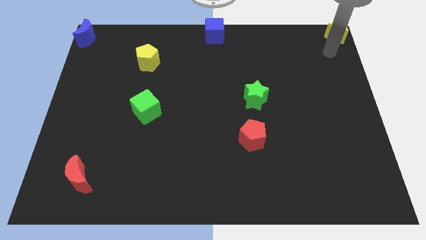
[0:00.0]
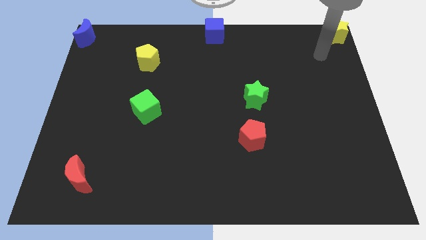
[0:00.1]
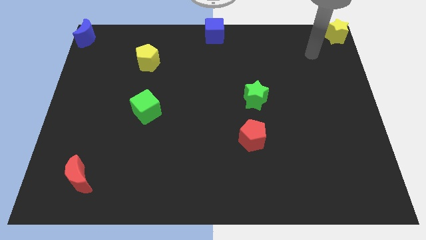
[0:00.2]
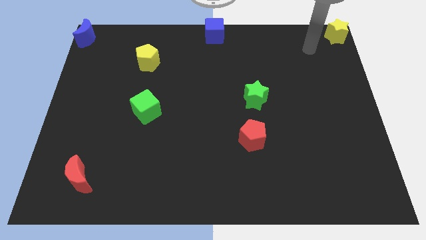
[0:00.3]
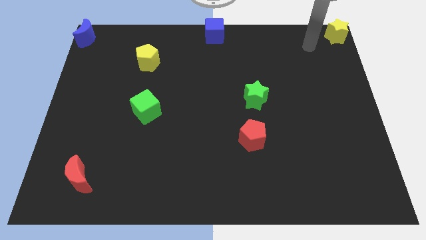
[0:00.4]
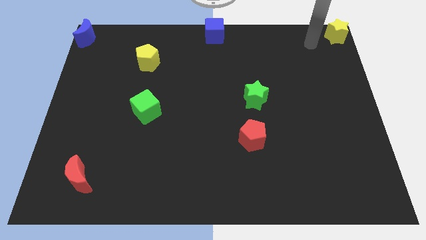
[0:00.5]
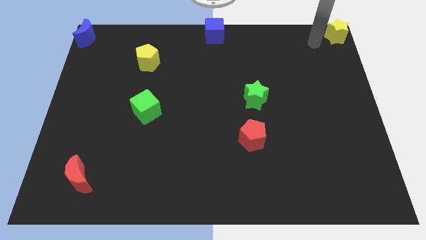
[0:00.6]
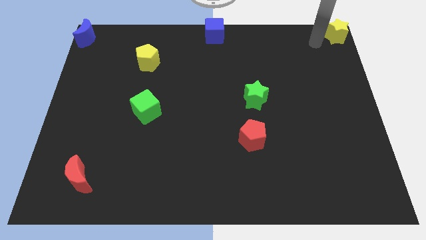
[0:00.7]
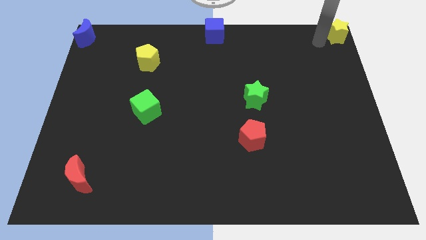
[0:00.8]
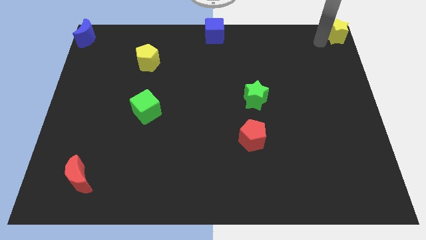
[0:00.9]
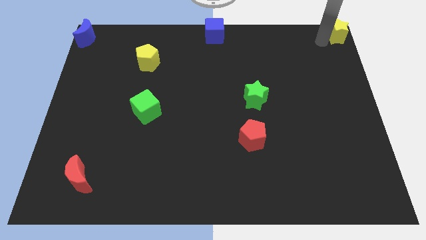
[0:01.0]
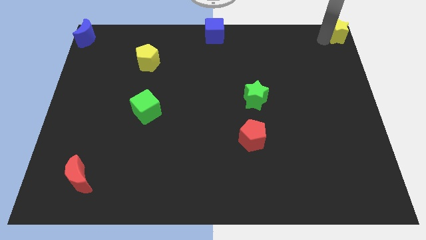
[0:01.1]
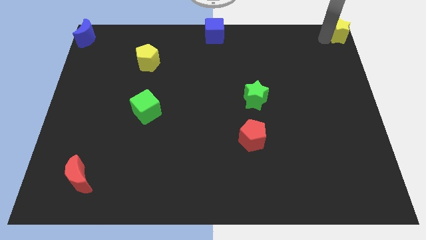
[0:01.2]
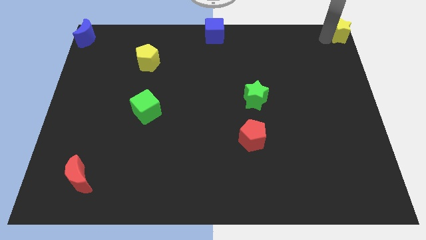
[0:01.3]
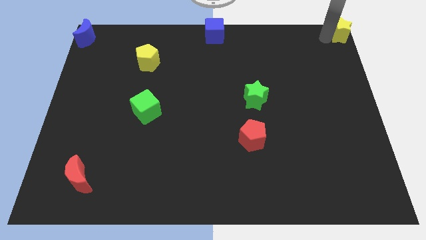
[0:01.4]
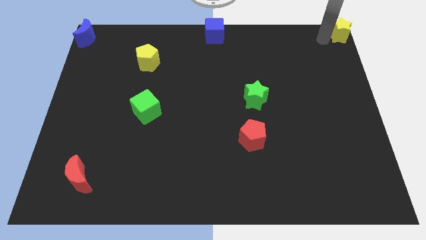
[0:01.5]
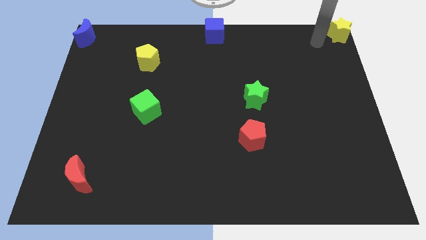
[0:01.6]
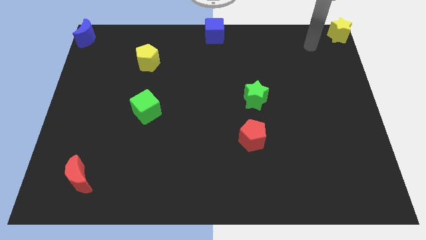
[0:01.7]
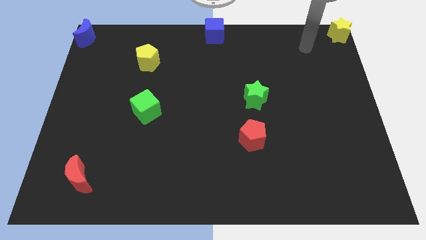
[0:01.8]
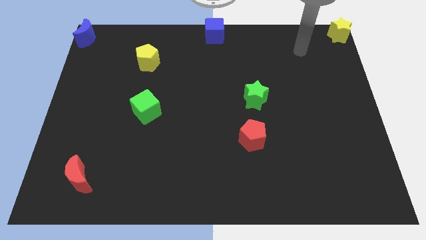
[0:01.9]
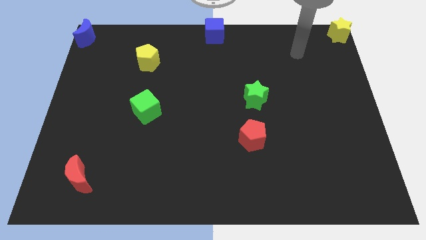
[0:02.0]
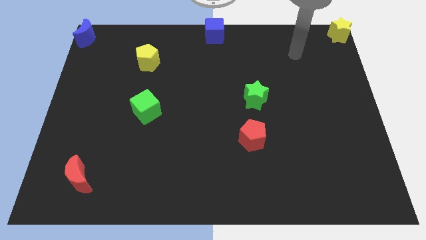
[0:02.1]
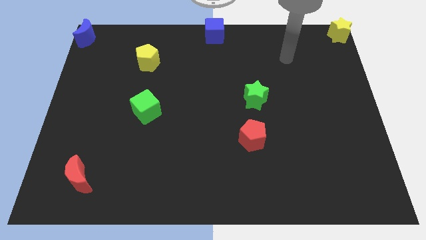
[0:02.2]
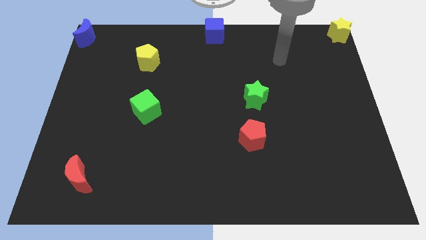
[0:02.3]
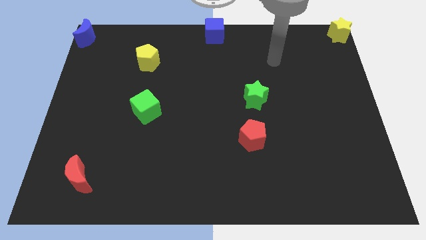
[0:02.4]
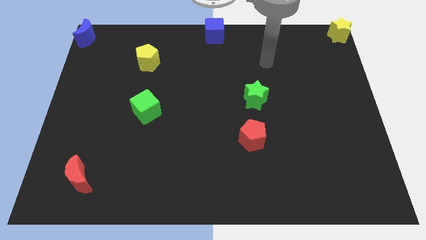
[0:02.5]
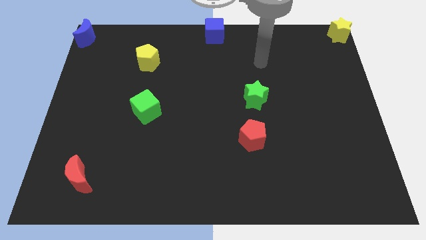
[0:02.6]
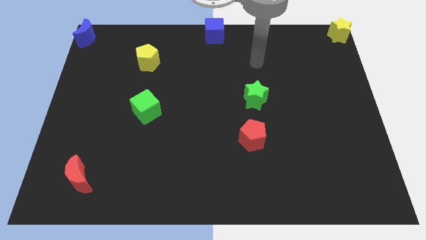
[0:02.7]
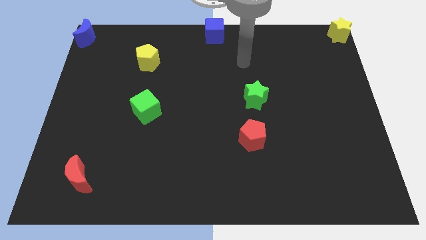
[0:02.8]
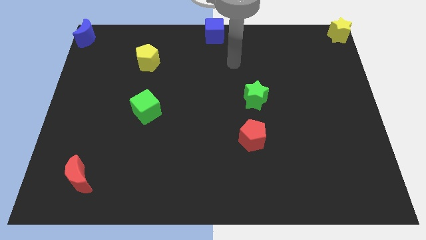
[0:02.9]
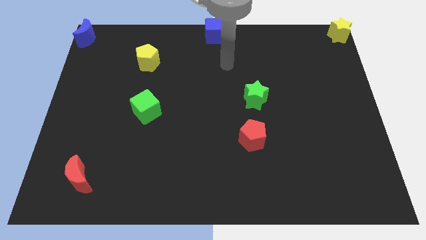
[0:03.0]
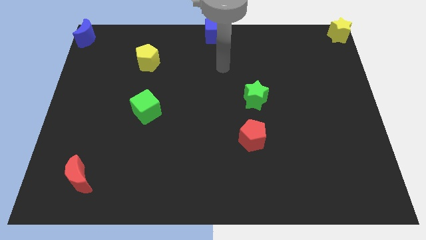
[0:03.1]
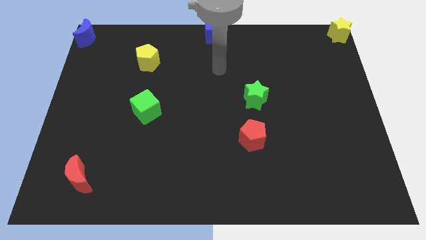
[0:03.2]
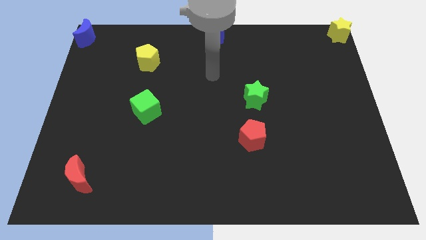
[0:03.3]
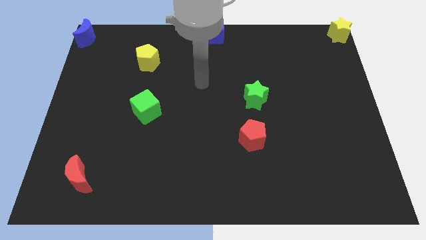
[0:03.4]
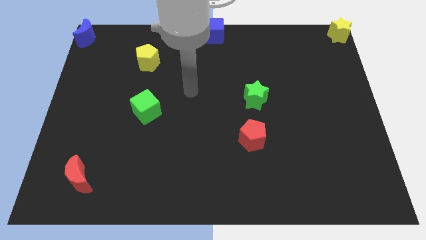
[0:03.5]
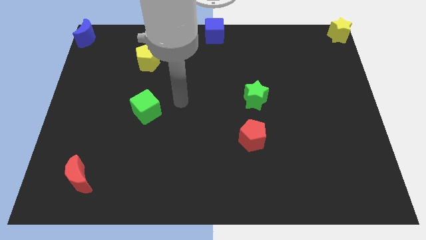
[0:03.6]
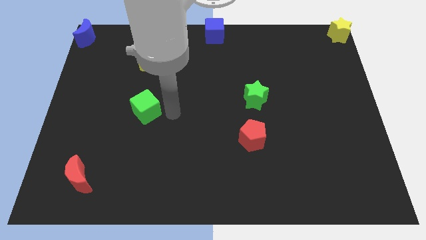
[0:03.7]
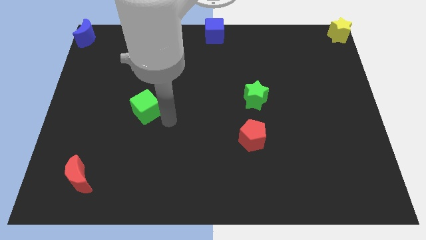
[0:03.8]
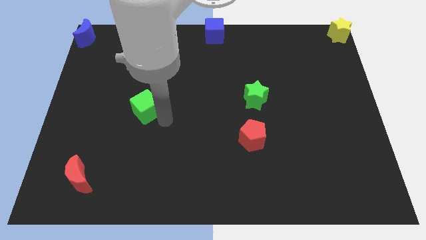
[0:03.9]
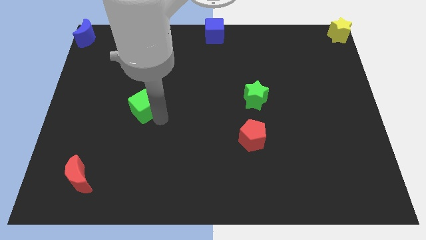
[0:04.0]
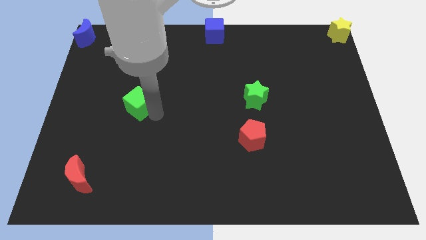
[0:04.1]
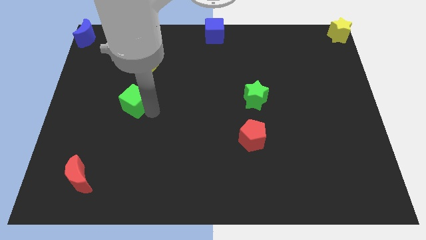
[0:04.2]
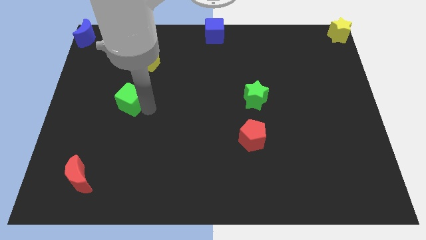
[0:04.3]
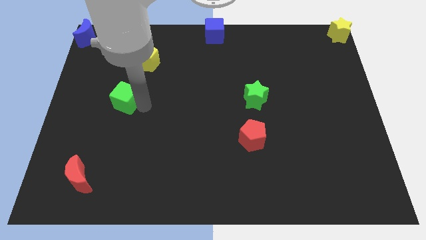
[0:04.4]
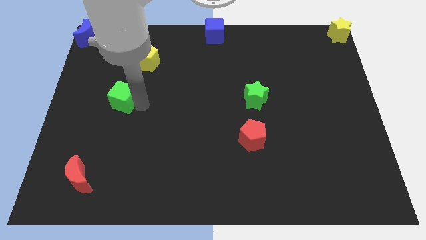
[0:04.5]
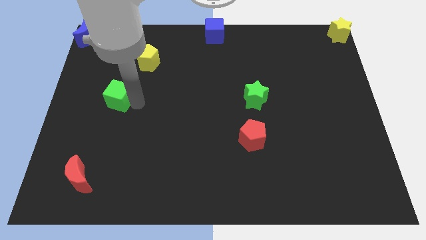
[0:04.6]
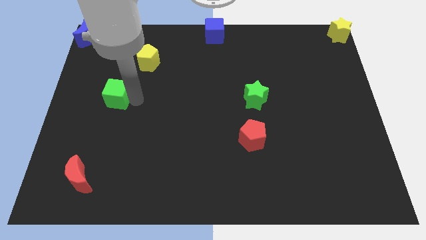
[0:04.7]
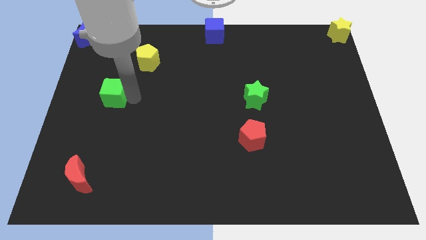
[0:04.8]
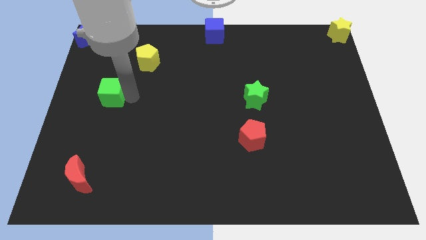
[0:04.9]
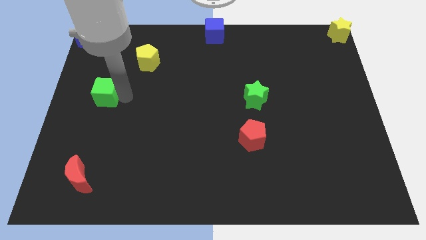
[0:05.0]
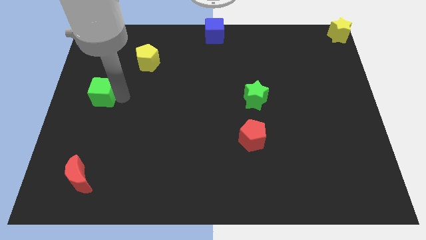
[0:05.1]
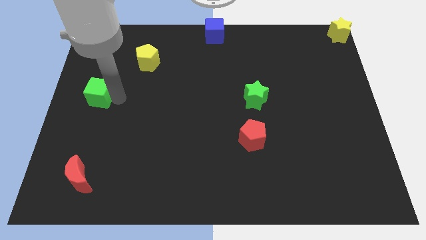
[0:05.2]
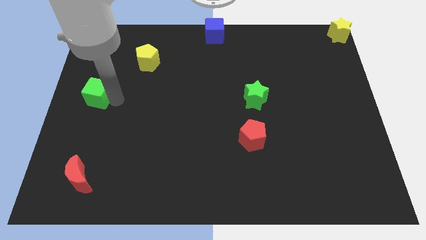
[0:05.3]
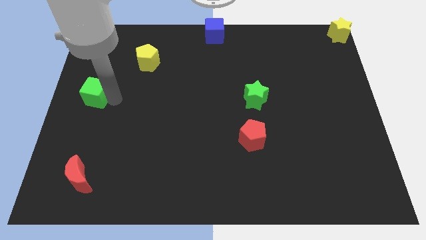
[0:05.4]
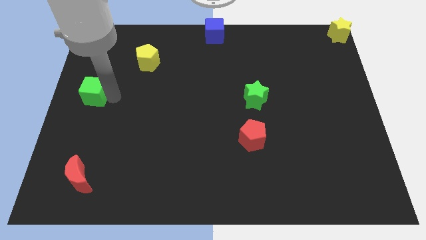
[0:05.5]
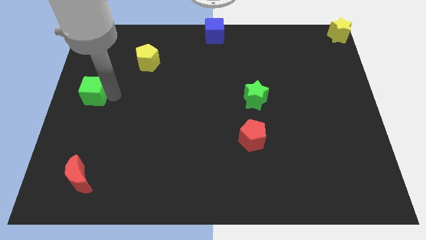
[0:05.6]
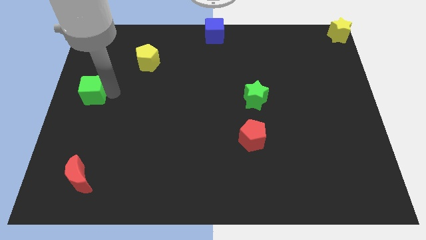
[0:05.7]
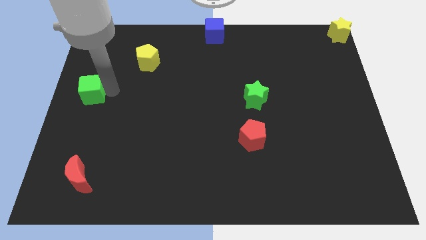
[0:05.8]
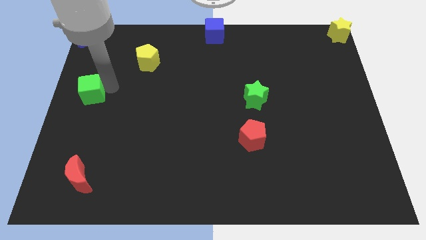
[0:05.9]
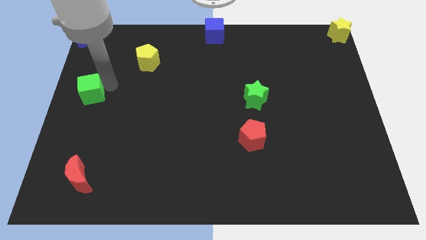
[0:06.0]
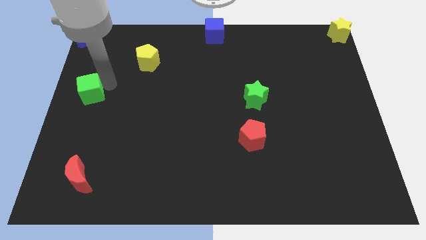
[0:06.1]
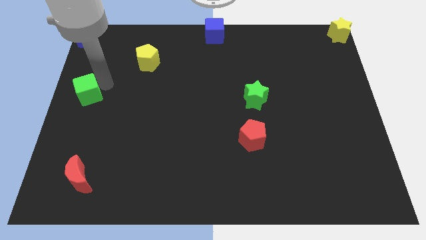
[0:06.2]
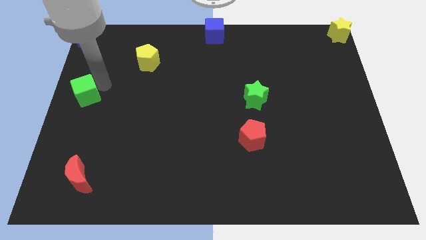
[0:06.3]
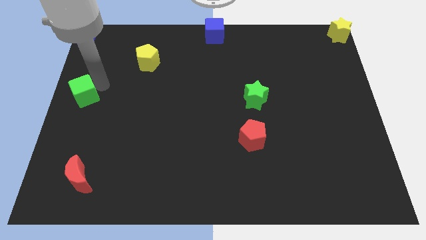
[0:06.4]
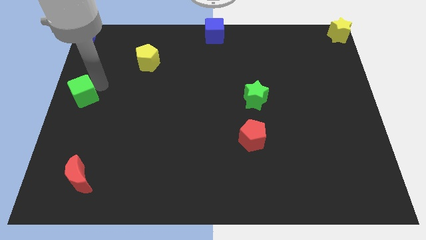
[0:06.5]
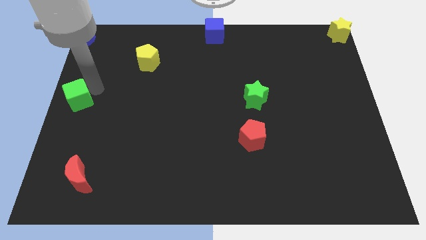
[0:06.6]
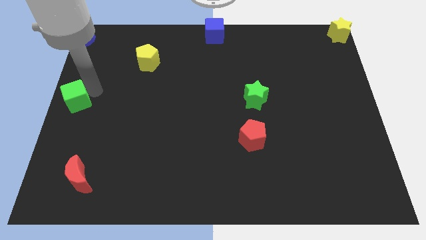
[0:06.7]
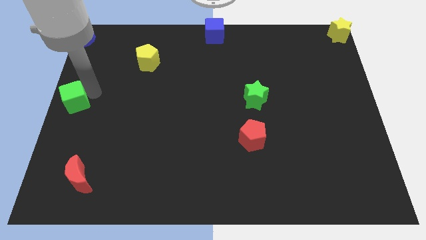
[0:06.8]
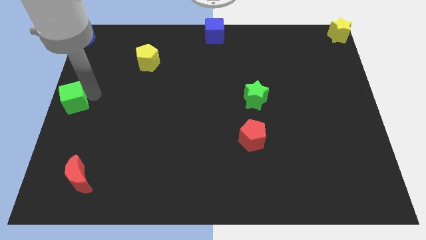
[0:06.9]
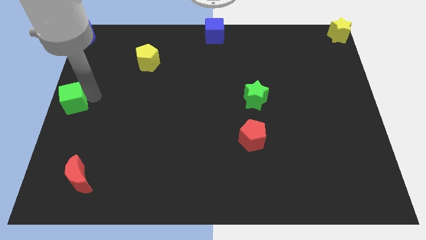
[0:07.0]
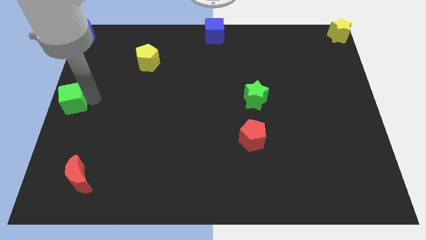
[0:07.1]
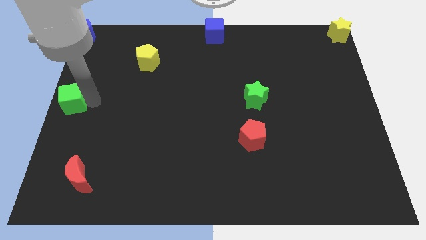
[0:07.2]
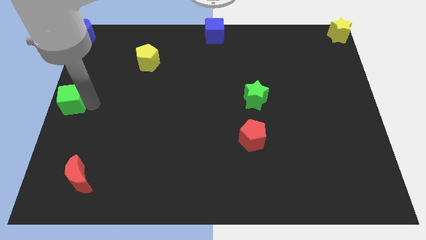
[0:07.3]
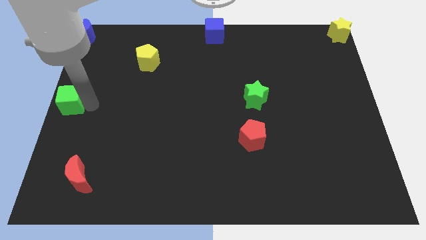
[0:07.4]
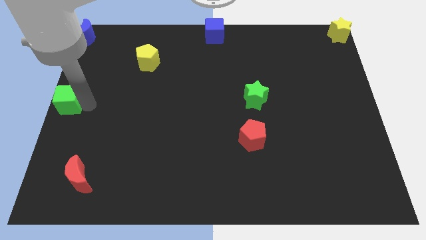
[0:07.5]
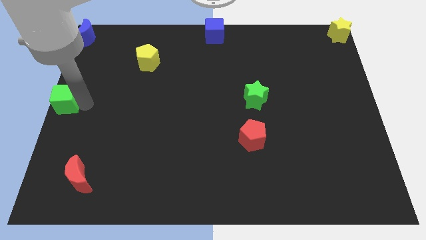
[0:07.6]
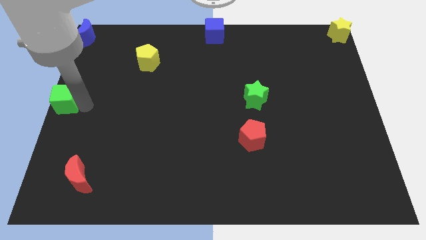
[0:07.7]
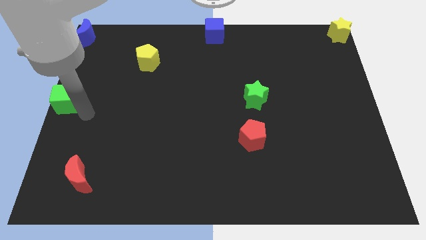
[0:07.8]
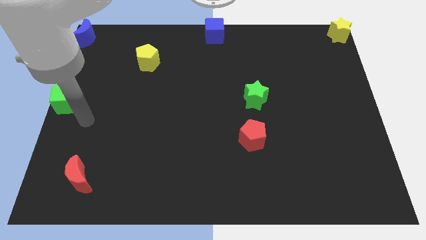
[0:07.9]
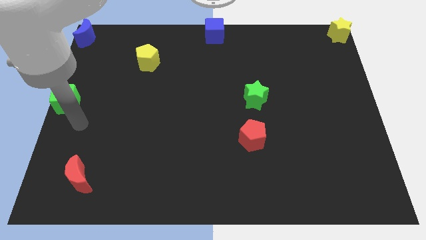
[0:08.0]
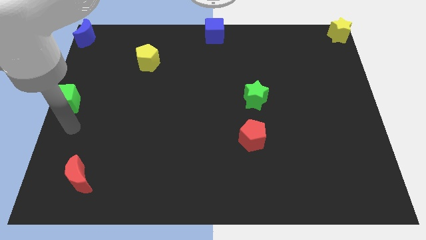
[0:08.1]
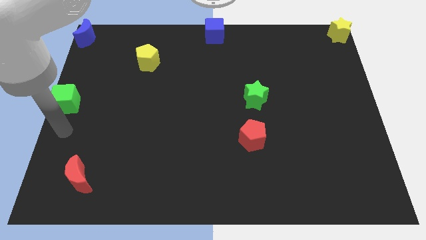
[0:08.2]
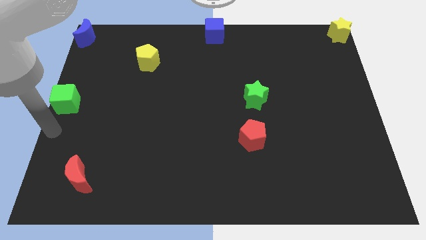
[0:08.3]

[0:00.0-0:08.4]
move the green cube to the left middle of the board

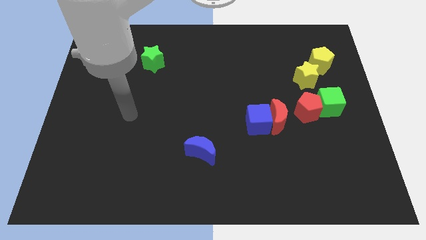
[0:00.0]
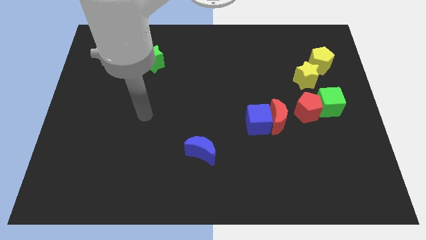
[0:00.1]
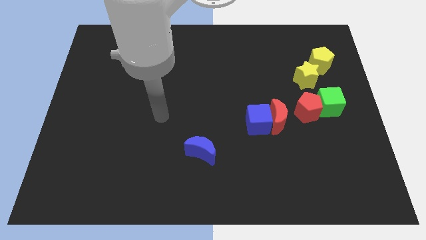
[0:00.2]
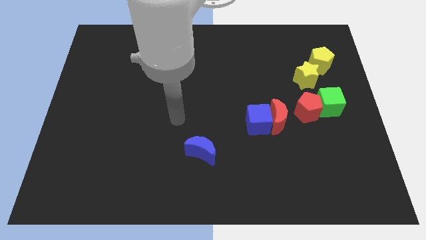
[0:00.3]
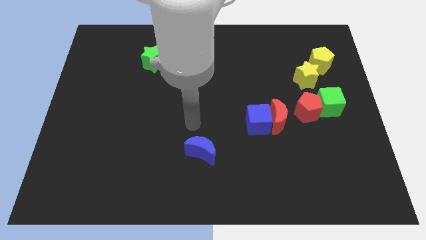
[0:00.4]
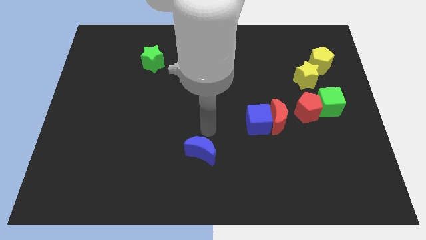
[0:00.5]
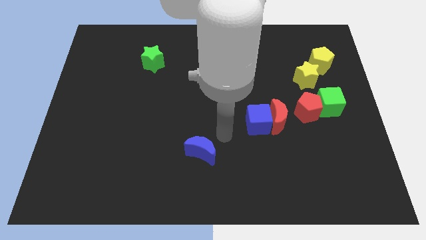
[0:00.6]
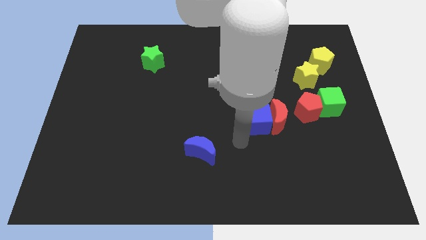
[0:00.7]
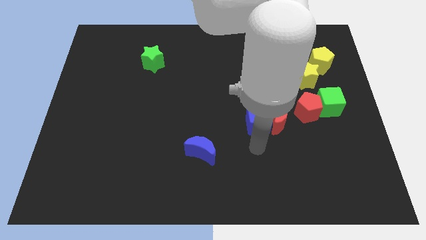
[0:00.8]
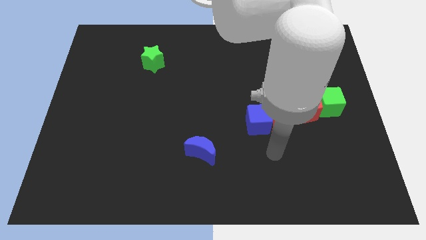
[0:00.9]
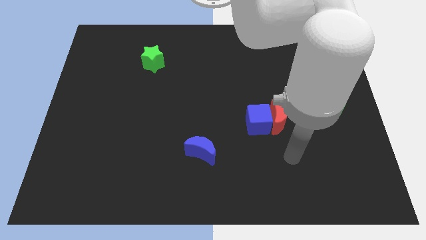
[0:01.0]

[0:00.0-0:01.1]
go to the right side of the table
